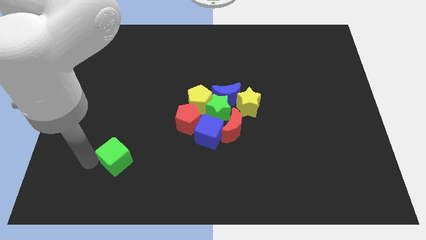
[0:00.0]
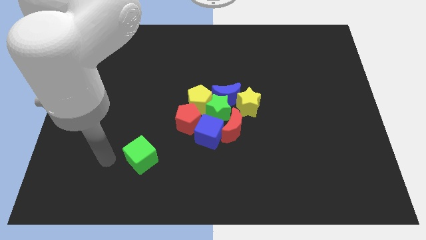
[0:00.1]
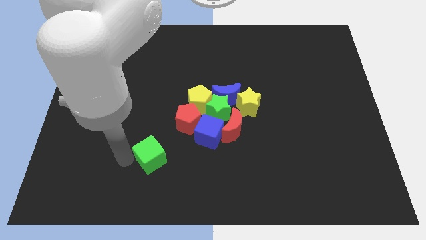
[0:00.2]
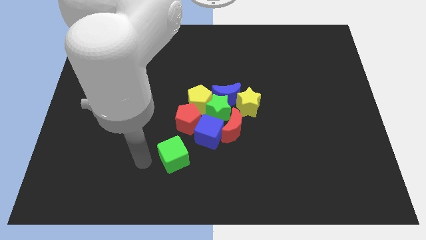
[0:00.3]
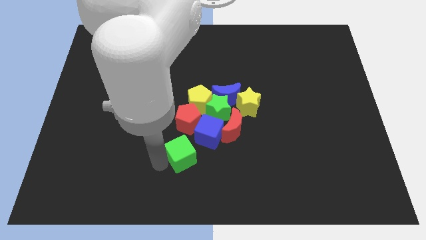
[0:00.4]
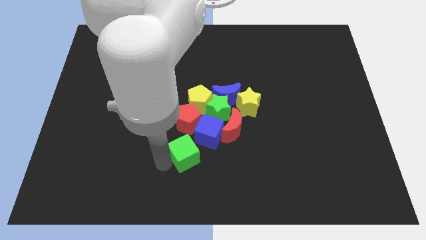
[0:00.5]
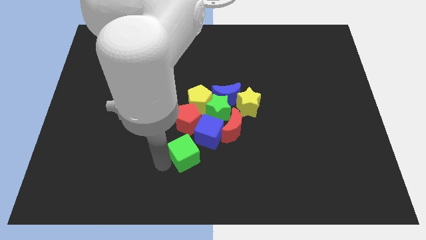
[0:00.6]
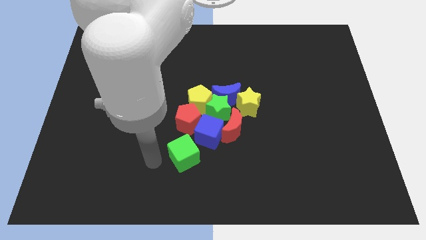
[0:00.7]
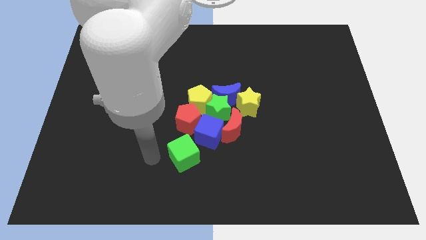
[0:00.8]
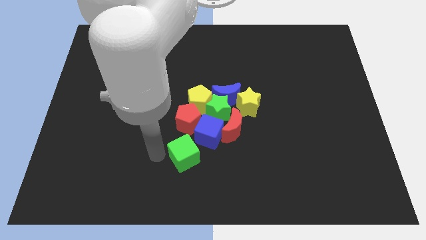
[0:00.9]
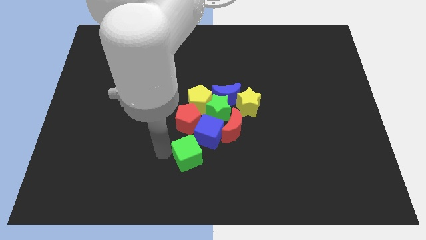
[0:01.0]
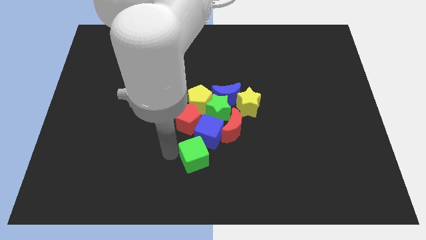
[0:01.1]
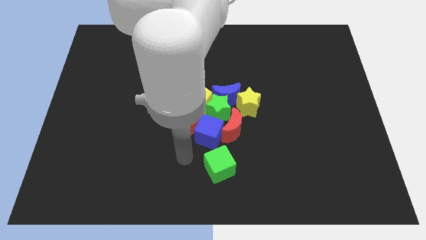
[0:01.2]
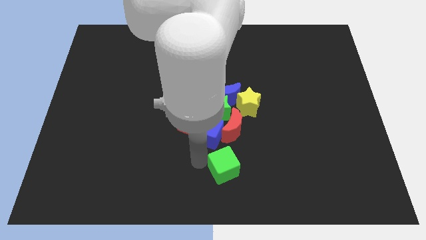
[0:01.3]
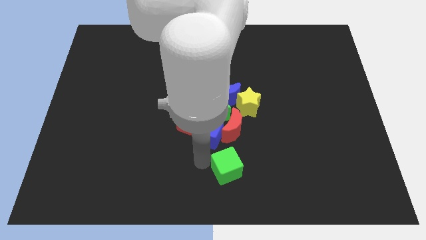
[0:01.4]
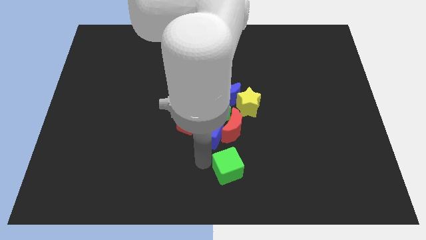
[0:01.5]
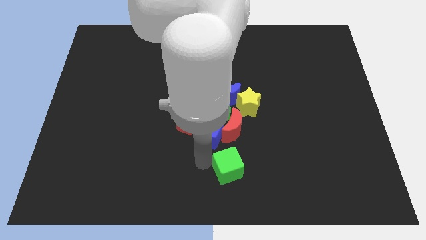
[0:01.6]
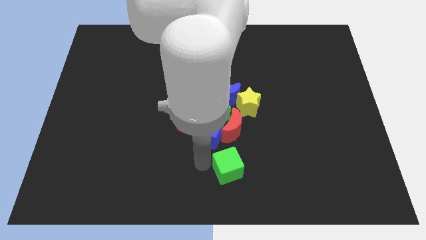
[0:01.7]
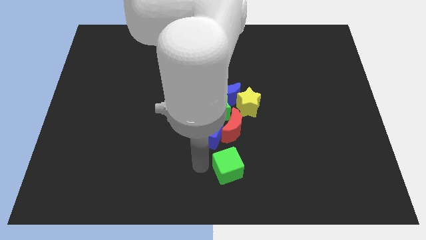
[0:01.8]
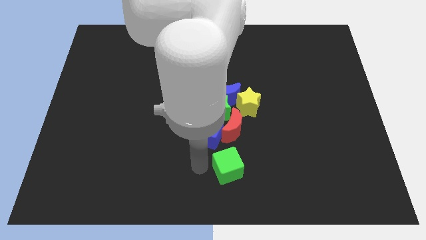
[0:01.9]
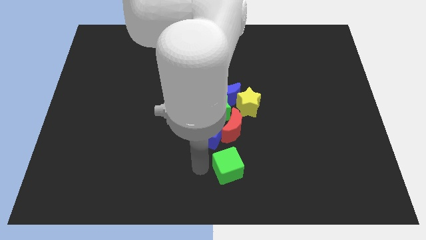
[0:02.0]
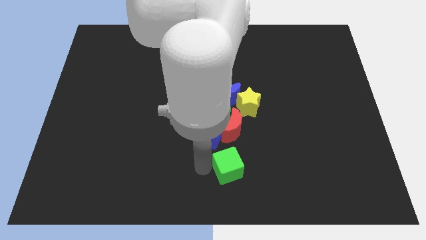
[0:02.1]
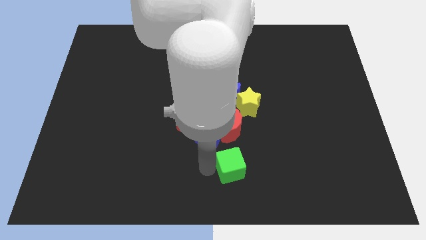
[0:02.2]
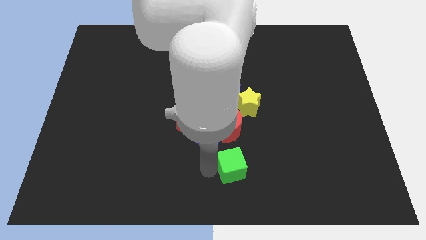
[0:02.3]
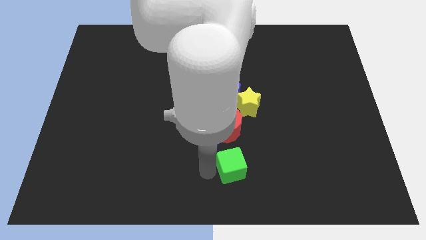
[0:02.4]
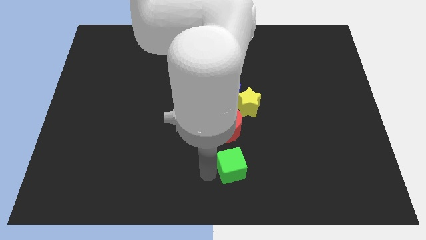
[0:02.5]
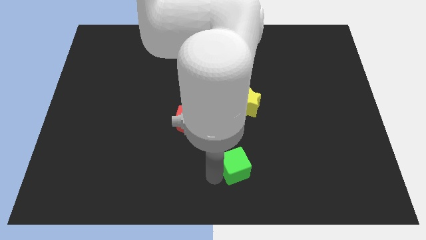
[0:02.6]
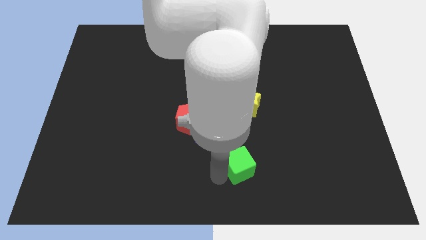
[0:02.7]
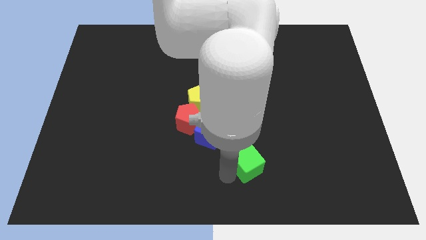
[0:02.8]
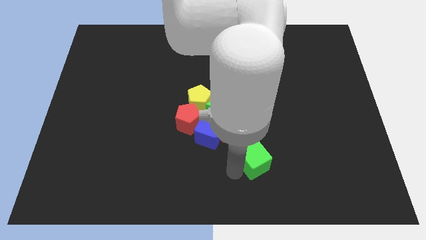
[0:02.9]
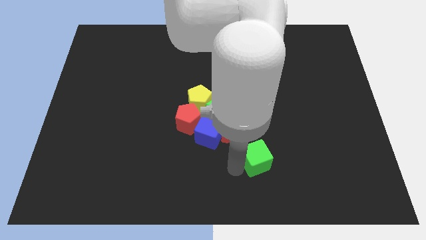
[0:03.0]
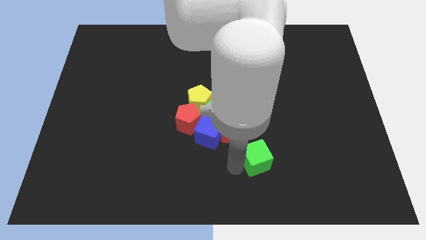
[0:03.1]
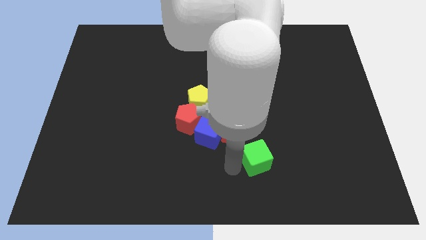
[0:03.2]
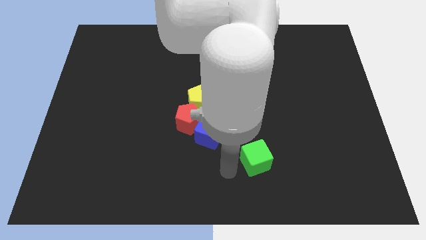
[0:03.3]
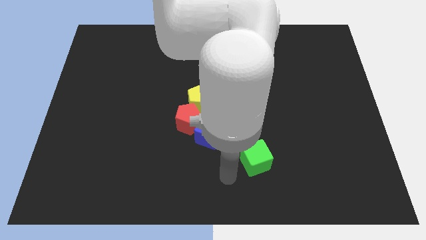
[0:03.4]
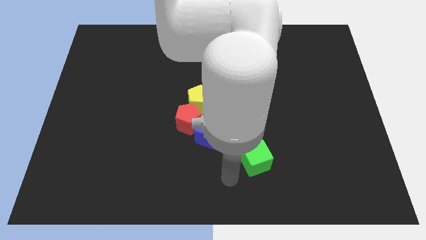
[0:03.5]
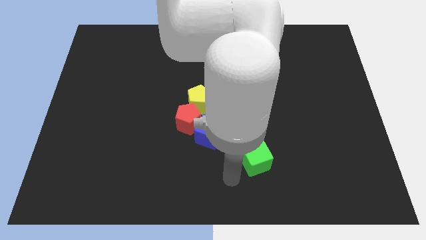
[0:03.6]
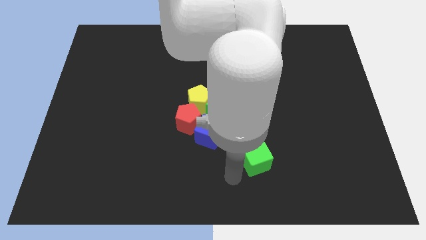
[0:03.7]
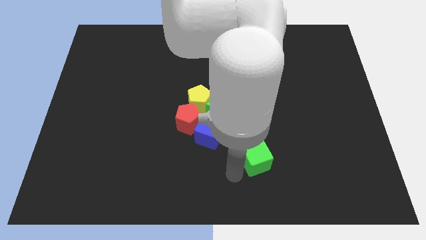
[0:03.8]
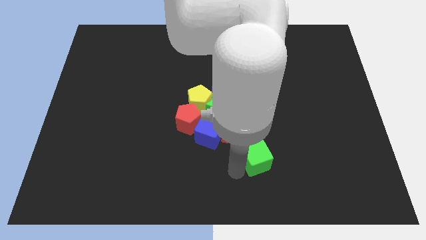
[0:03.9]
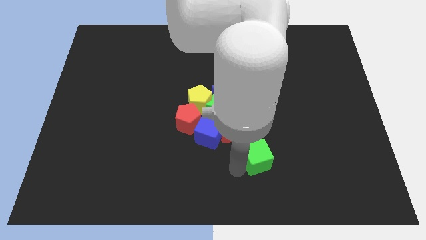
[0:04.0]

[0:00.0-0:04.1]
move the green cube towards the red crescent

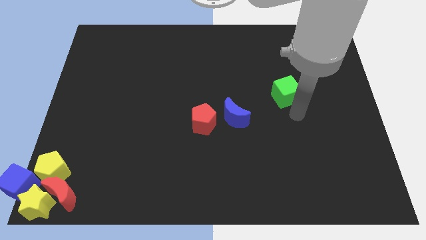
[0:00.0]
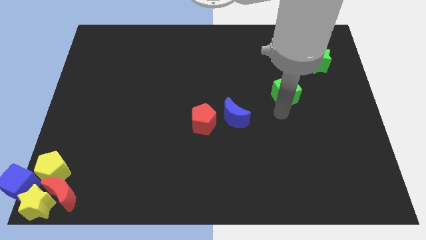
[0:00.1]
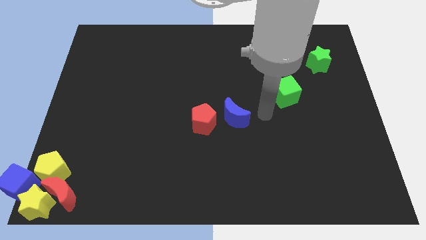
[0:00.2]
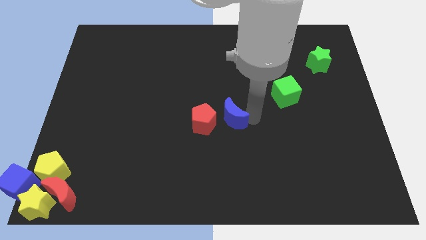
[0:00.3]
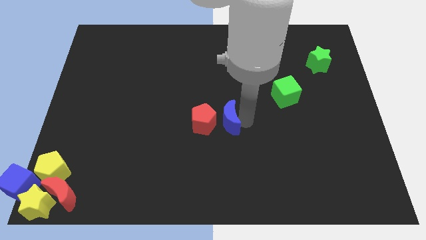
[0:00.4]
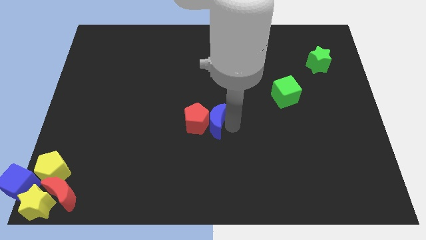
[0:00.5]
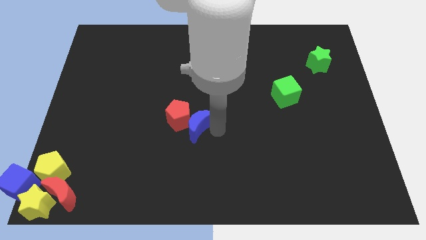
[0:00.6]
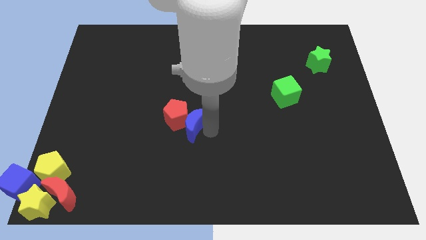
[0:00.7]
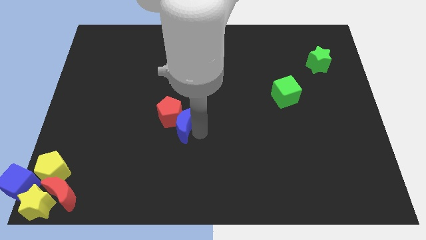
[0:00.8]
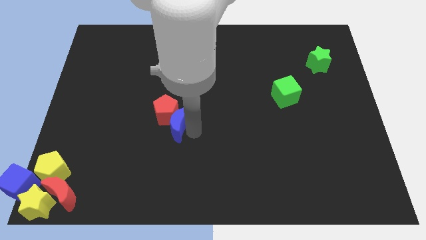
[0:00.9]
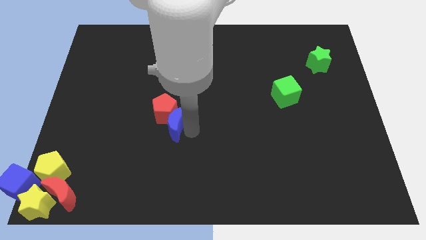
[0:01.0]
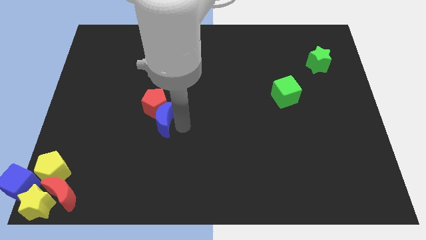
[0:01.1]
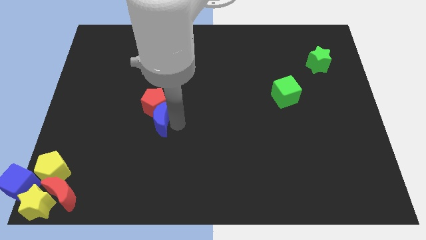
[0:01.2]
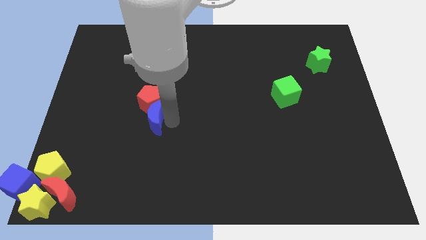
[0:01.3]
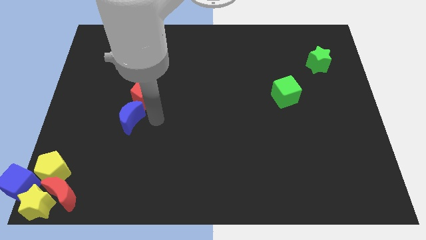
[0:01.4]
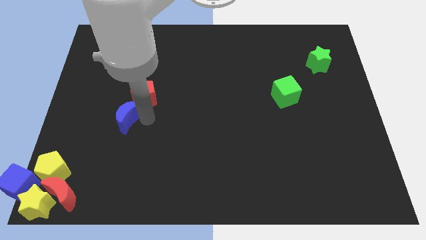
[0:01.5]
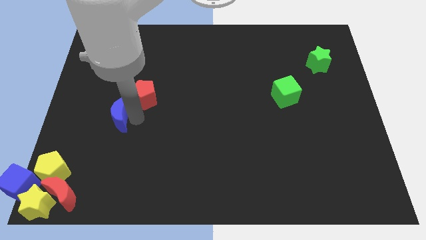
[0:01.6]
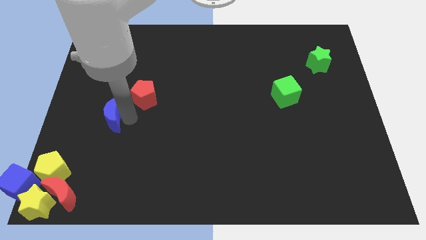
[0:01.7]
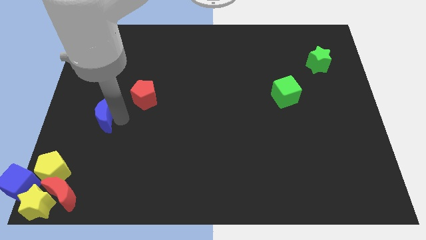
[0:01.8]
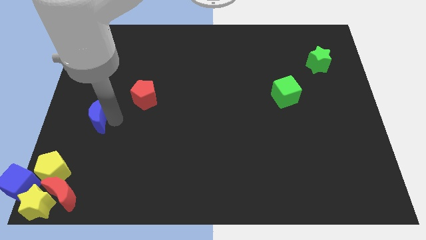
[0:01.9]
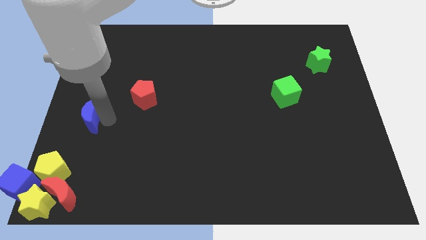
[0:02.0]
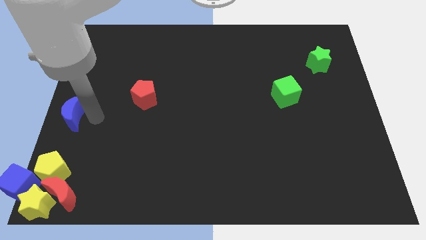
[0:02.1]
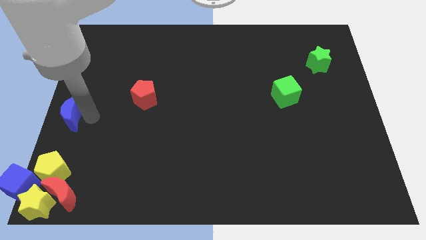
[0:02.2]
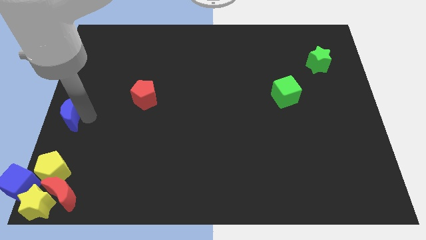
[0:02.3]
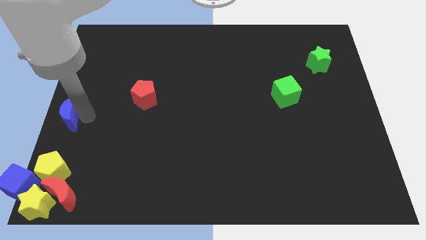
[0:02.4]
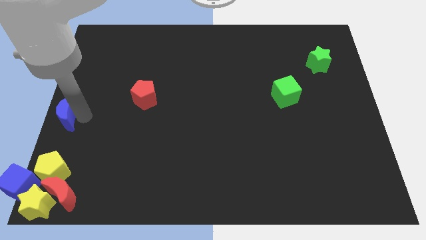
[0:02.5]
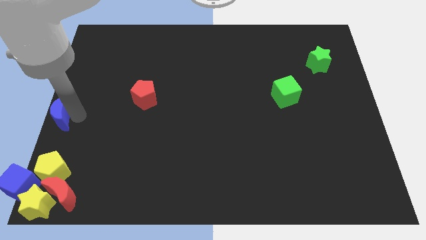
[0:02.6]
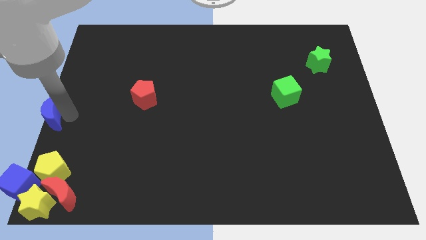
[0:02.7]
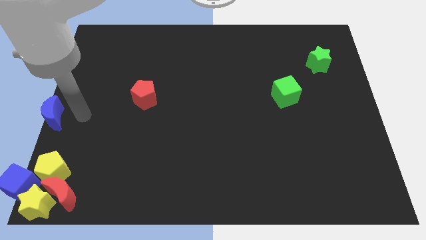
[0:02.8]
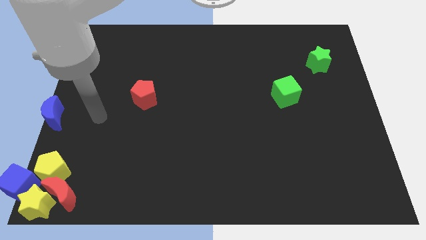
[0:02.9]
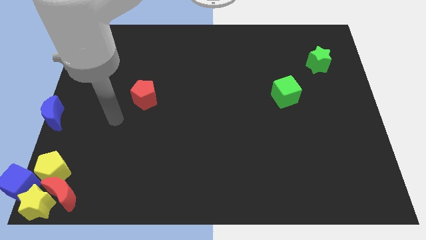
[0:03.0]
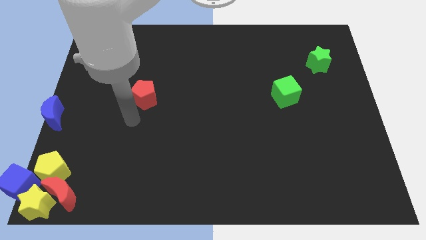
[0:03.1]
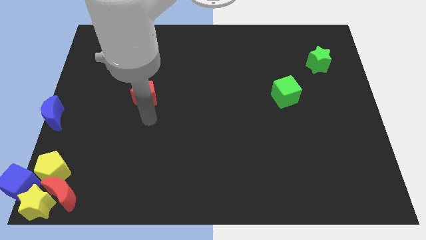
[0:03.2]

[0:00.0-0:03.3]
place blue moon to the left center of the board

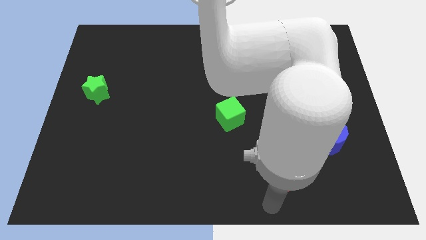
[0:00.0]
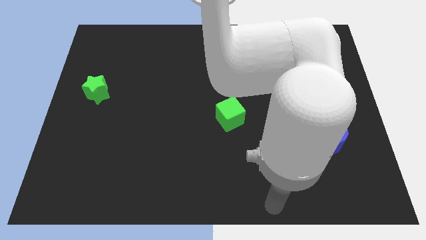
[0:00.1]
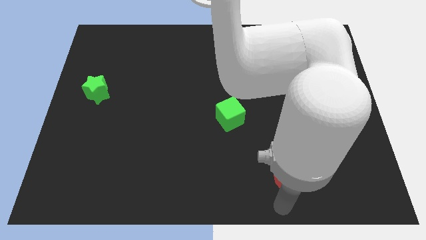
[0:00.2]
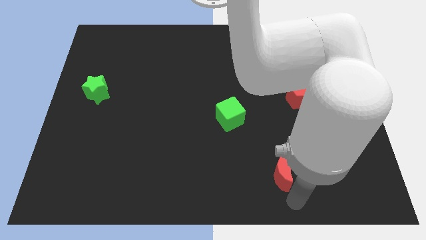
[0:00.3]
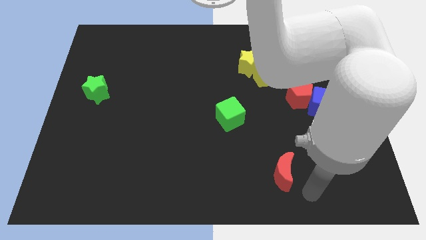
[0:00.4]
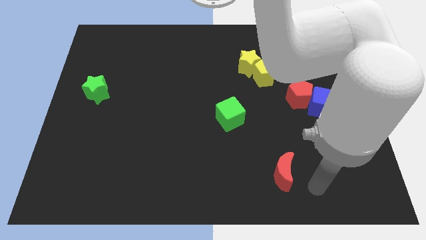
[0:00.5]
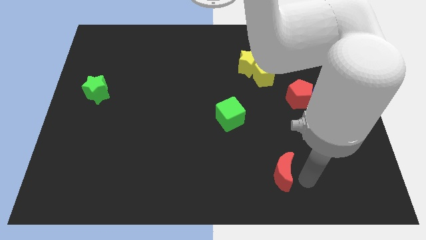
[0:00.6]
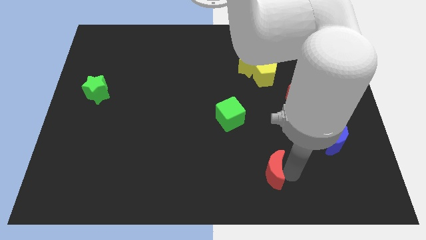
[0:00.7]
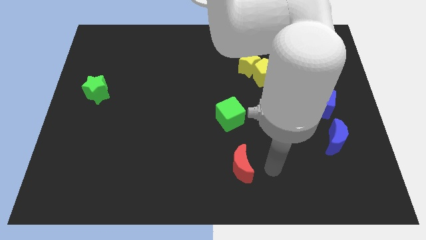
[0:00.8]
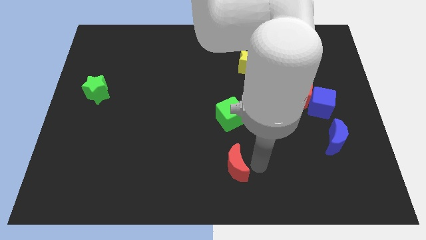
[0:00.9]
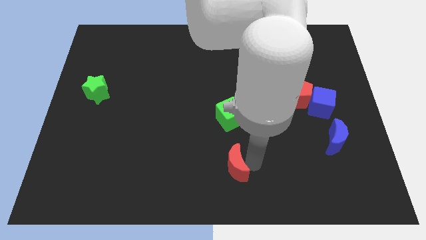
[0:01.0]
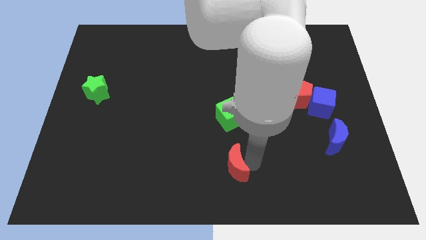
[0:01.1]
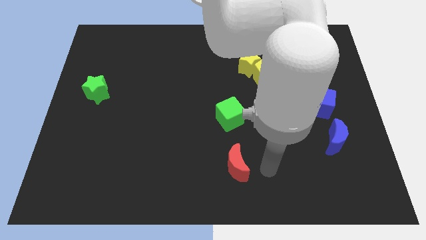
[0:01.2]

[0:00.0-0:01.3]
place the red crescent under the green cube

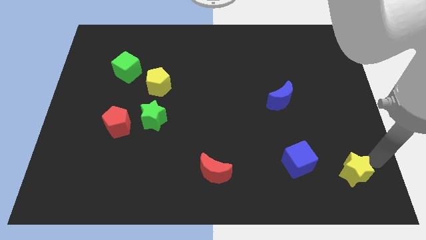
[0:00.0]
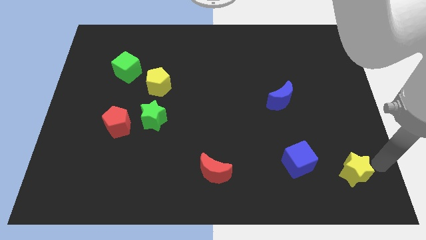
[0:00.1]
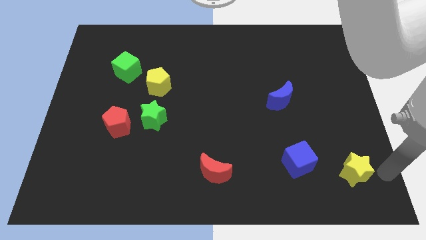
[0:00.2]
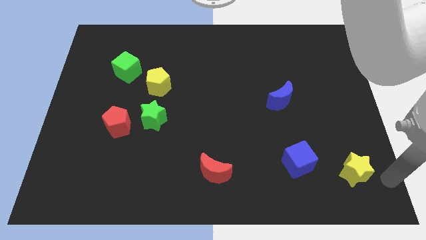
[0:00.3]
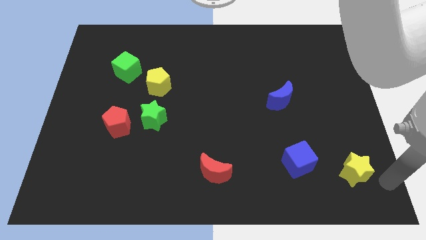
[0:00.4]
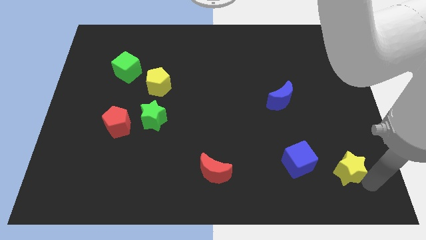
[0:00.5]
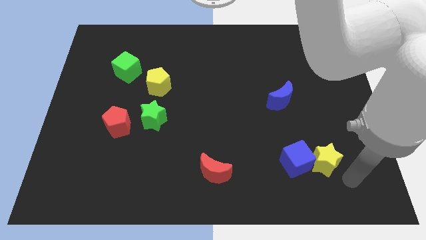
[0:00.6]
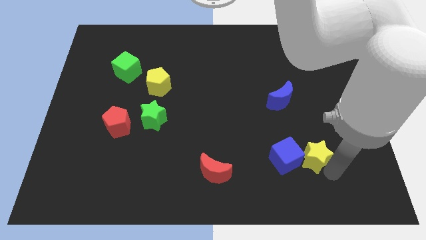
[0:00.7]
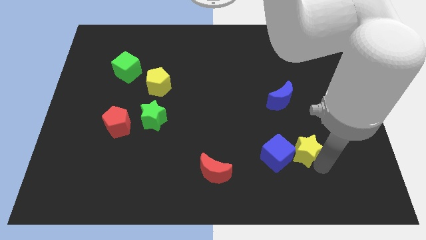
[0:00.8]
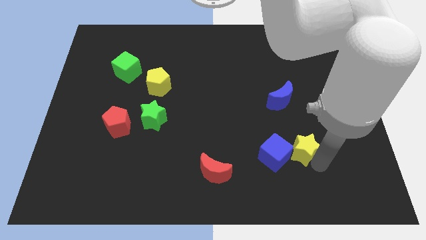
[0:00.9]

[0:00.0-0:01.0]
push the yellow star into the blue cube
